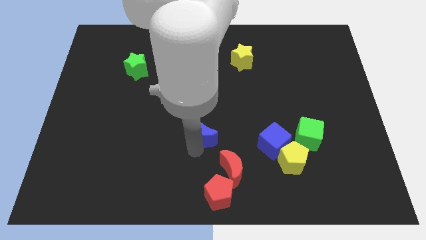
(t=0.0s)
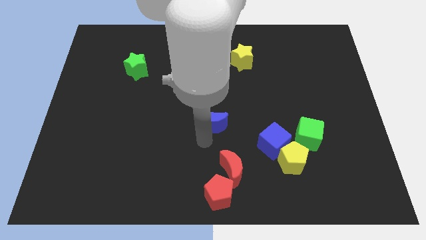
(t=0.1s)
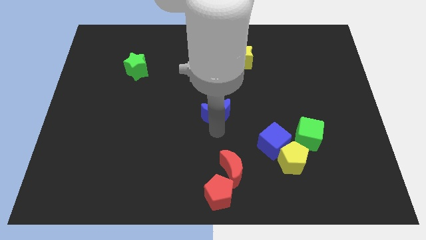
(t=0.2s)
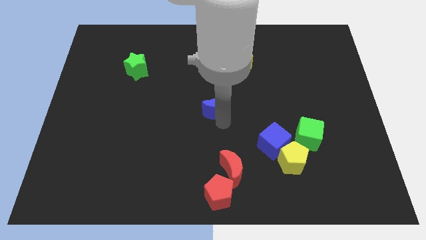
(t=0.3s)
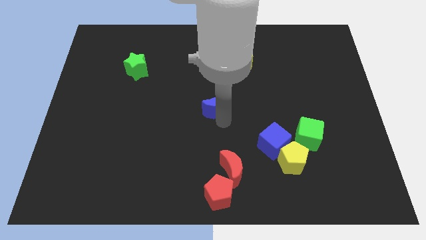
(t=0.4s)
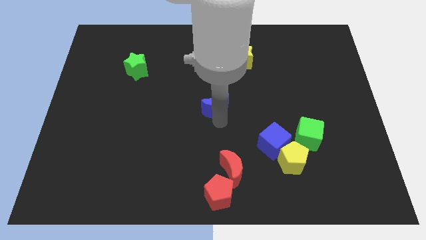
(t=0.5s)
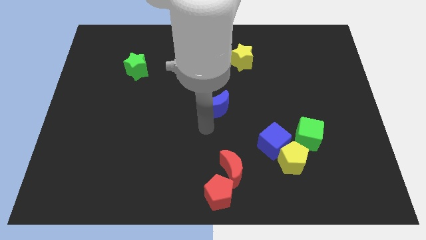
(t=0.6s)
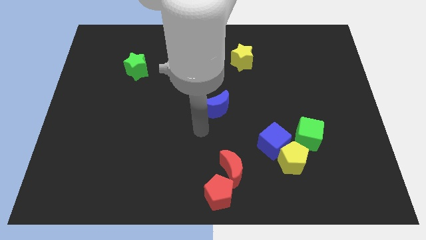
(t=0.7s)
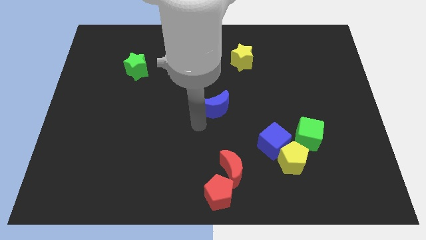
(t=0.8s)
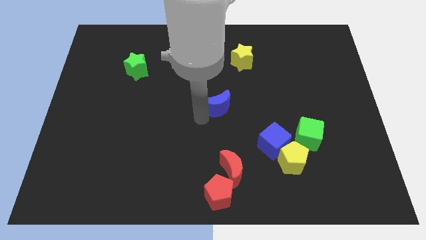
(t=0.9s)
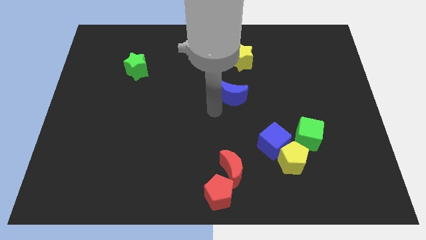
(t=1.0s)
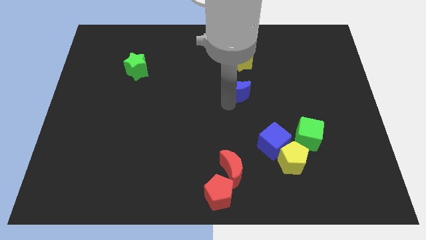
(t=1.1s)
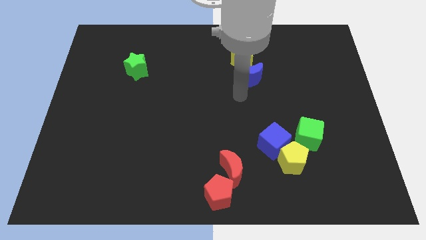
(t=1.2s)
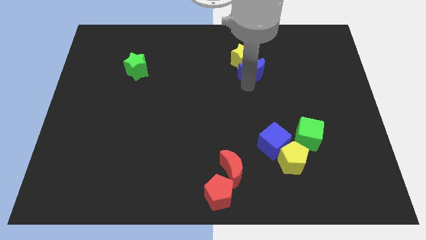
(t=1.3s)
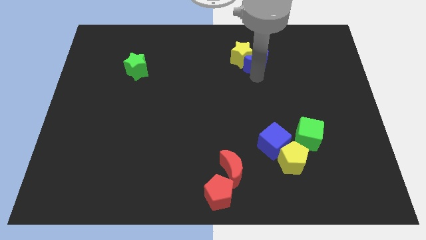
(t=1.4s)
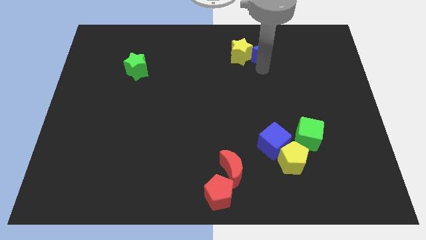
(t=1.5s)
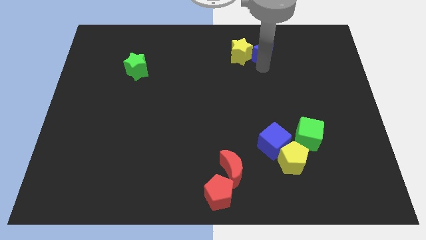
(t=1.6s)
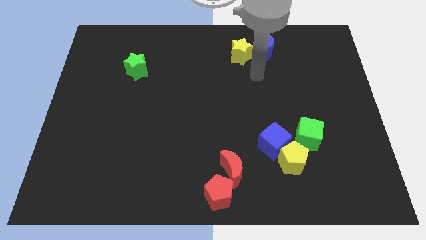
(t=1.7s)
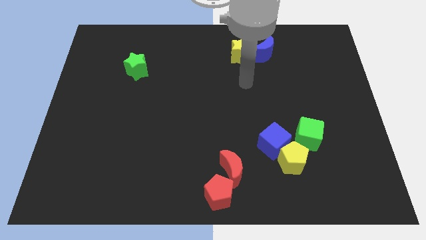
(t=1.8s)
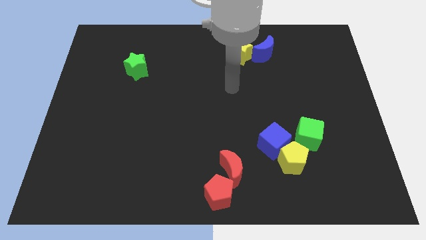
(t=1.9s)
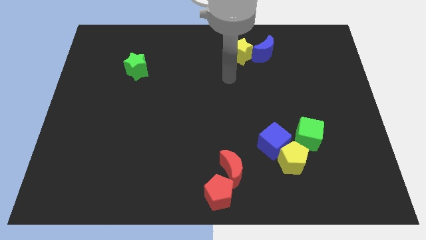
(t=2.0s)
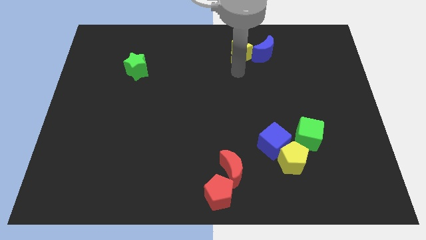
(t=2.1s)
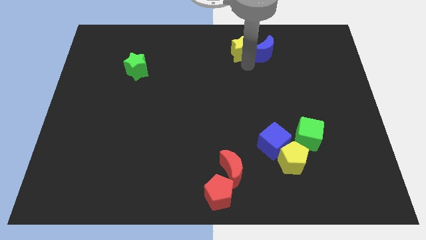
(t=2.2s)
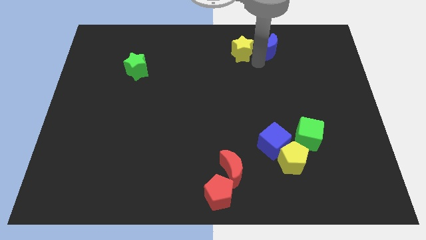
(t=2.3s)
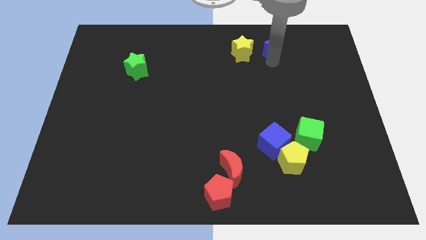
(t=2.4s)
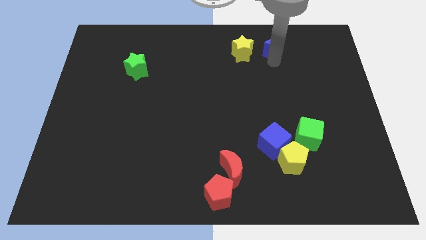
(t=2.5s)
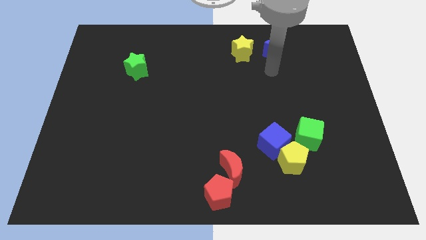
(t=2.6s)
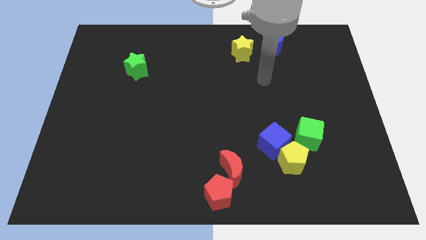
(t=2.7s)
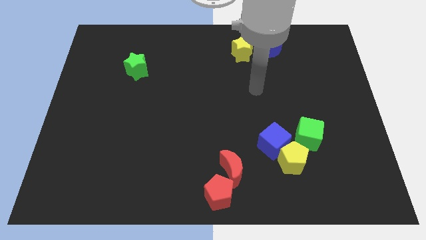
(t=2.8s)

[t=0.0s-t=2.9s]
place the blue moon right to the yellow moon

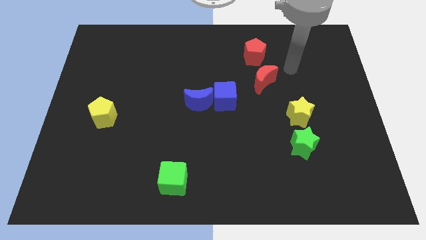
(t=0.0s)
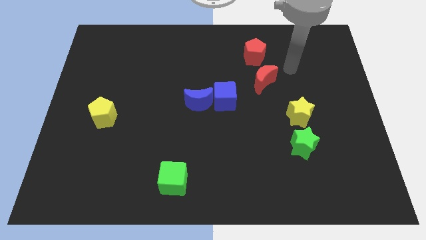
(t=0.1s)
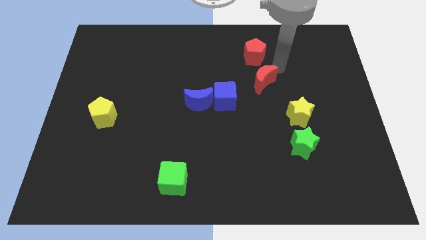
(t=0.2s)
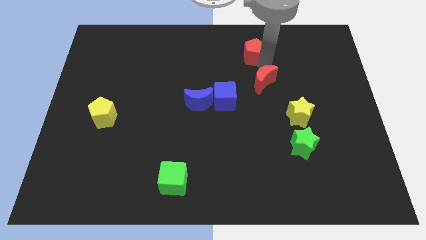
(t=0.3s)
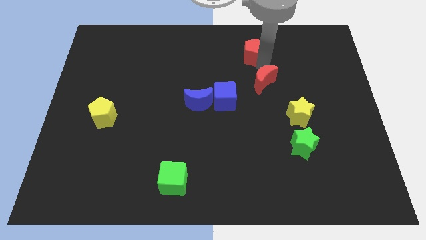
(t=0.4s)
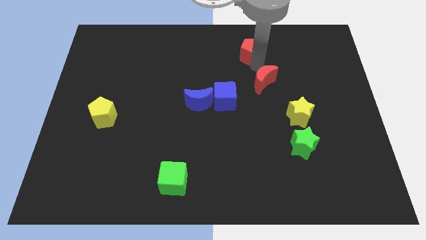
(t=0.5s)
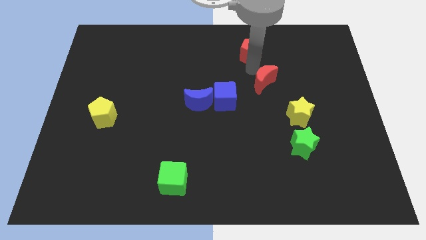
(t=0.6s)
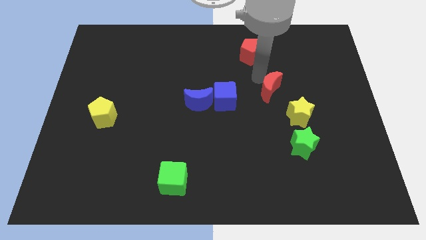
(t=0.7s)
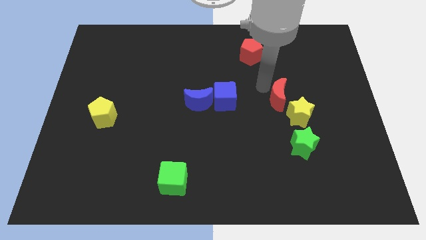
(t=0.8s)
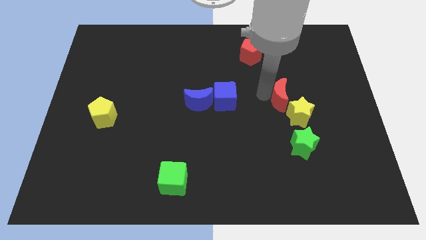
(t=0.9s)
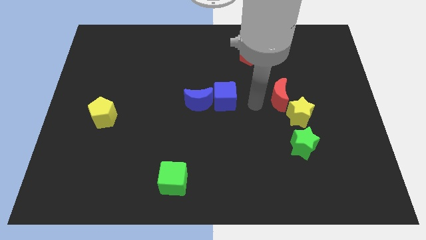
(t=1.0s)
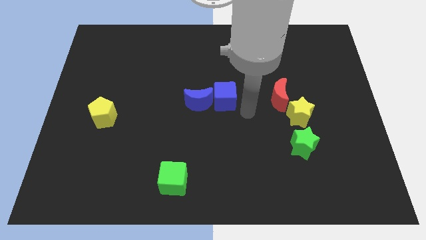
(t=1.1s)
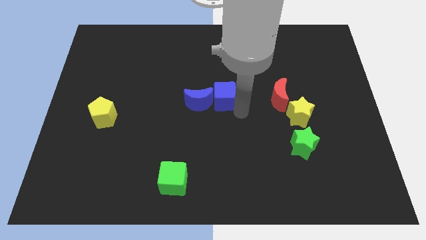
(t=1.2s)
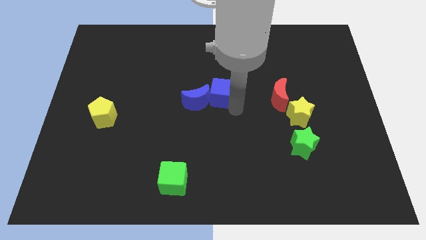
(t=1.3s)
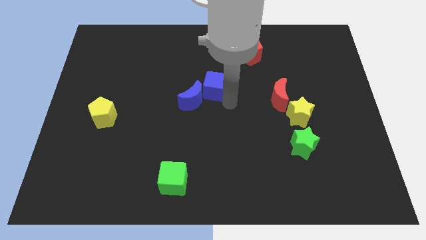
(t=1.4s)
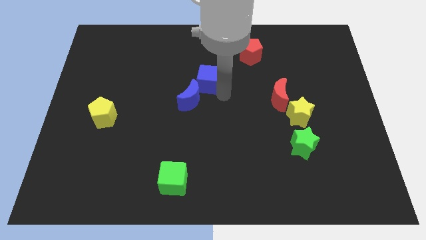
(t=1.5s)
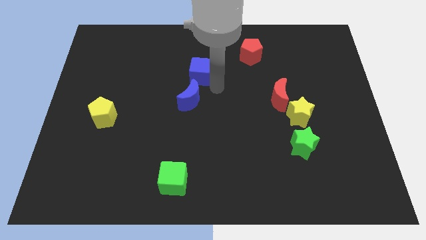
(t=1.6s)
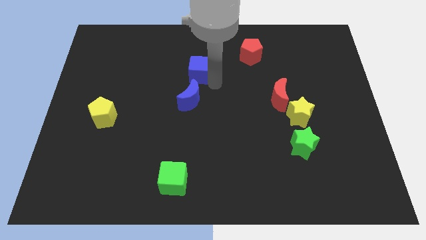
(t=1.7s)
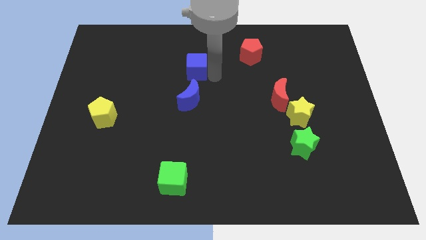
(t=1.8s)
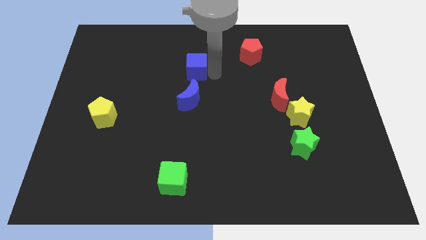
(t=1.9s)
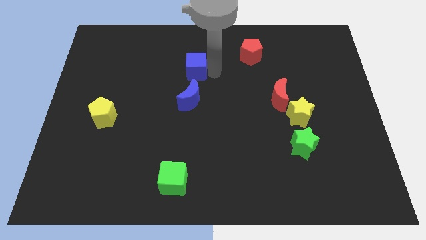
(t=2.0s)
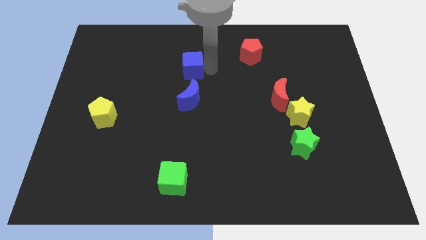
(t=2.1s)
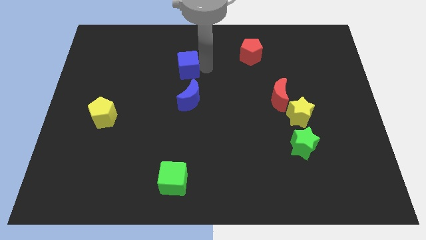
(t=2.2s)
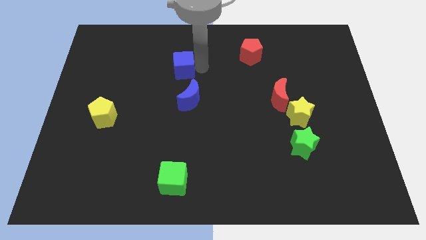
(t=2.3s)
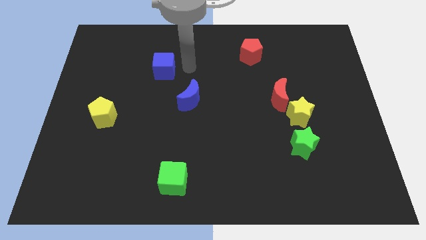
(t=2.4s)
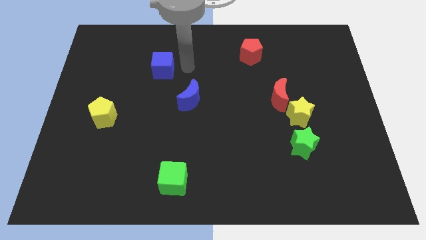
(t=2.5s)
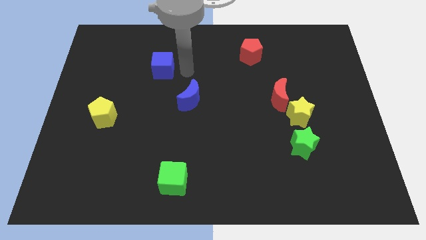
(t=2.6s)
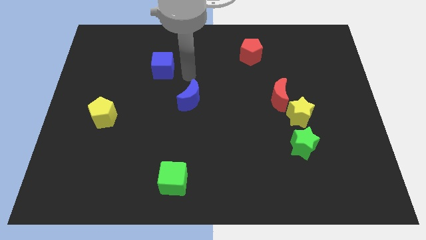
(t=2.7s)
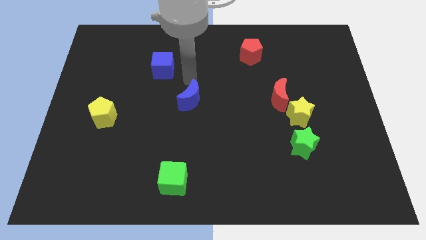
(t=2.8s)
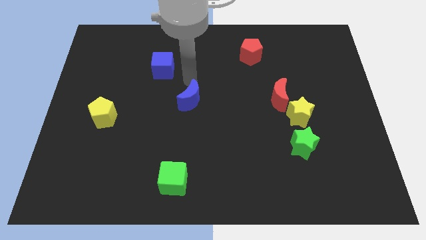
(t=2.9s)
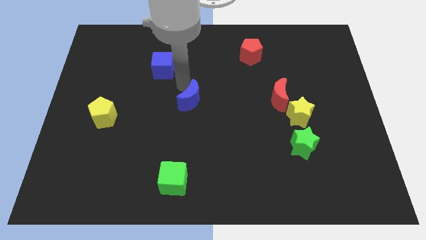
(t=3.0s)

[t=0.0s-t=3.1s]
separate the blue cube from the blue crescent

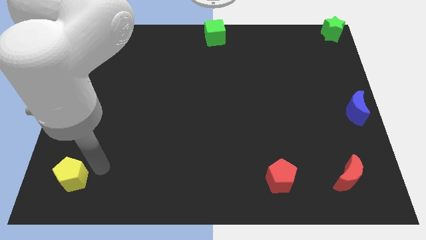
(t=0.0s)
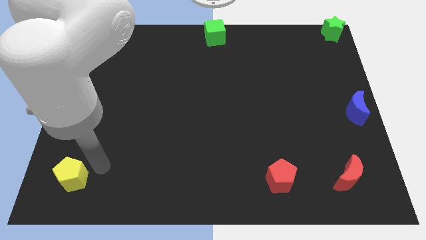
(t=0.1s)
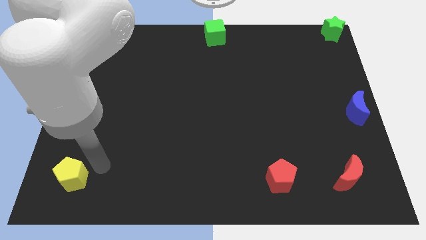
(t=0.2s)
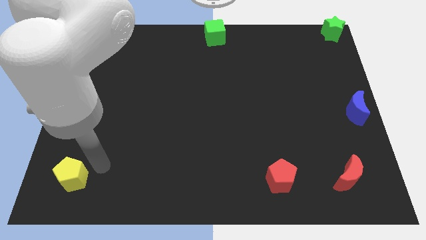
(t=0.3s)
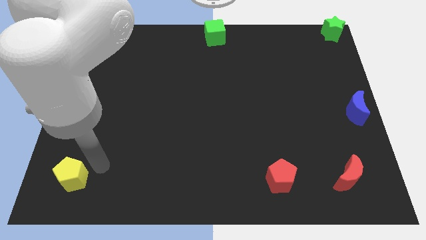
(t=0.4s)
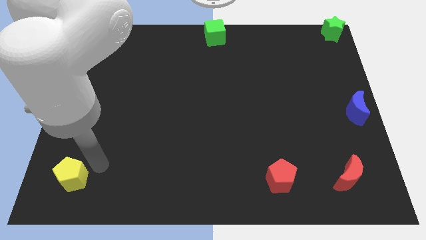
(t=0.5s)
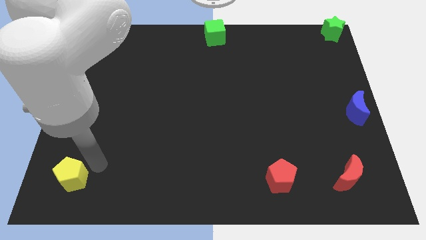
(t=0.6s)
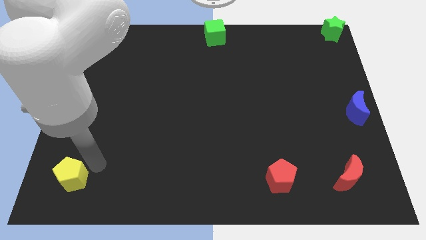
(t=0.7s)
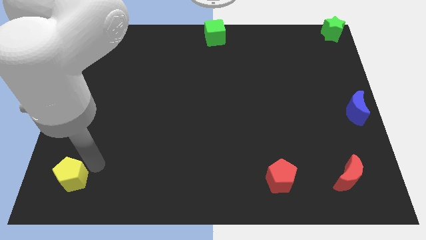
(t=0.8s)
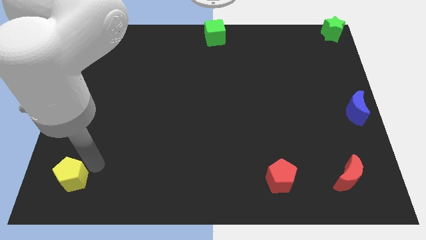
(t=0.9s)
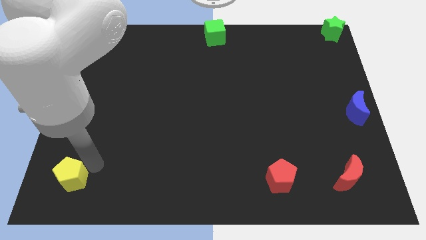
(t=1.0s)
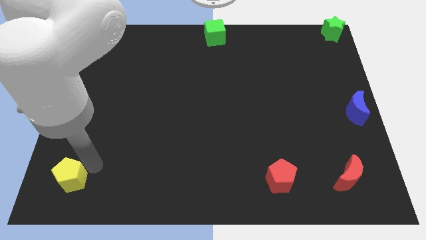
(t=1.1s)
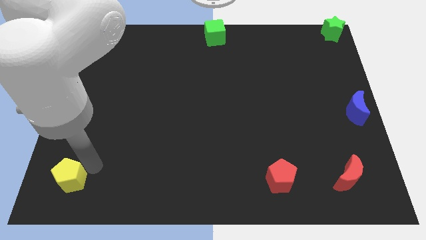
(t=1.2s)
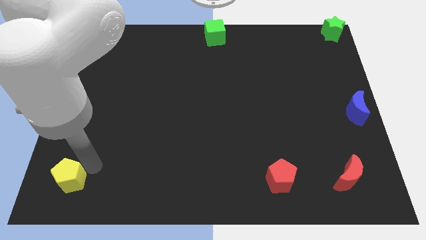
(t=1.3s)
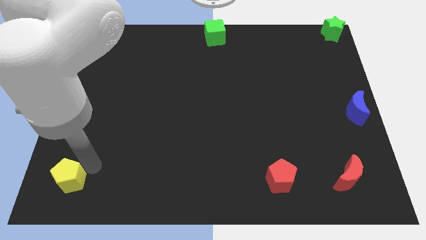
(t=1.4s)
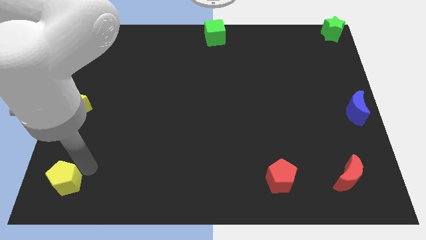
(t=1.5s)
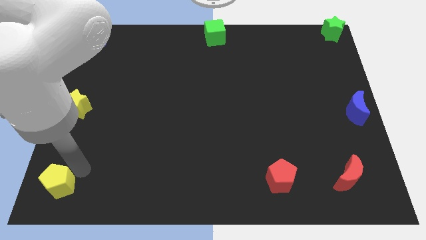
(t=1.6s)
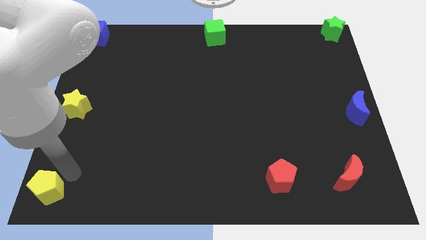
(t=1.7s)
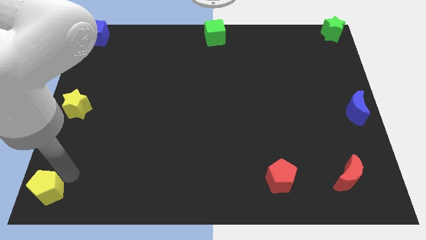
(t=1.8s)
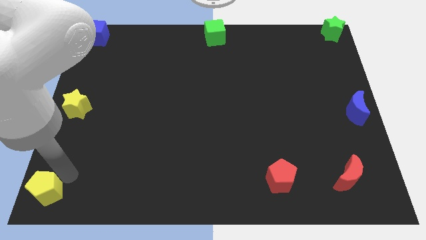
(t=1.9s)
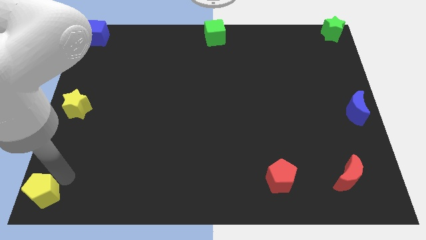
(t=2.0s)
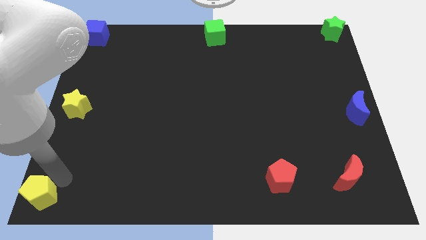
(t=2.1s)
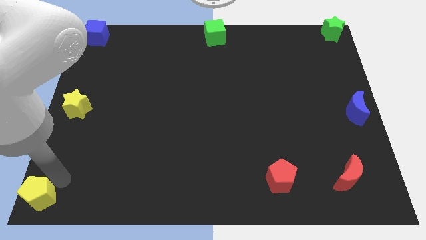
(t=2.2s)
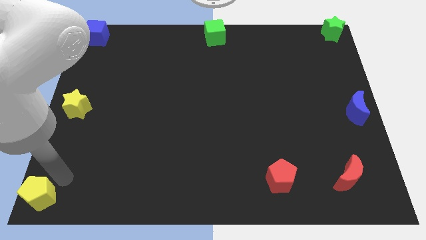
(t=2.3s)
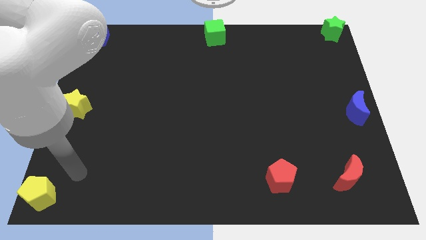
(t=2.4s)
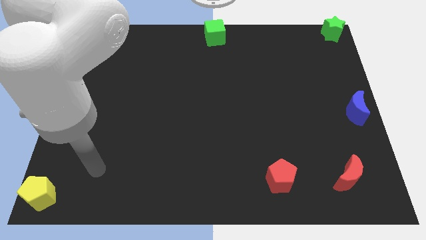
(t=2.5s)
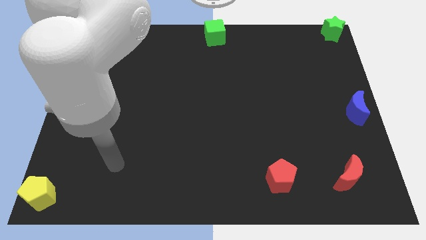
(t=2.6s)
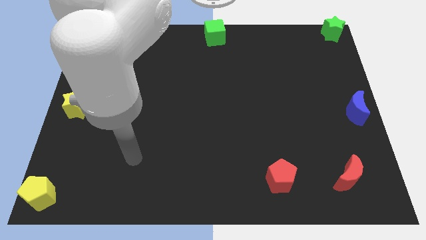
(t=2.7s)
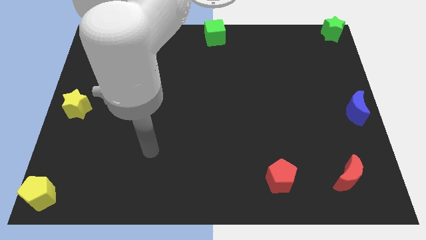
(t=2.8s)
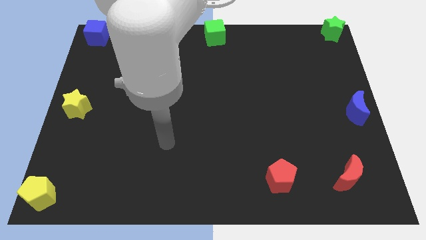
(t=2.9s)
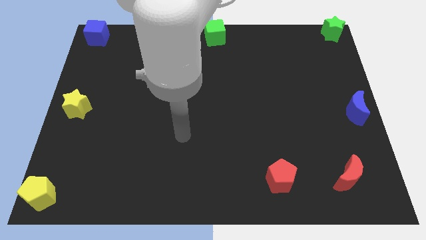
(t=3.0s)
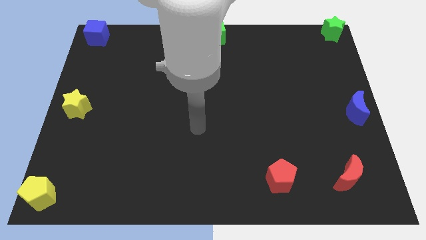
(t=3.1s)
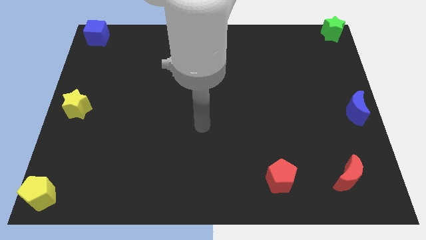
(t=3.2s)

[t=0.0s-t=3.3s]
place the yellow pentagon on the bottom left corner of the board
